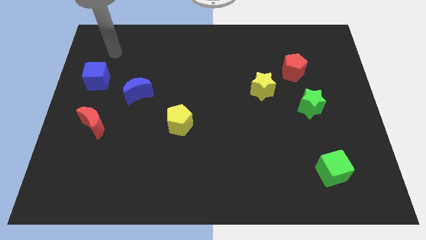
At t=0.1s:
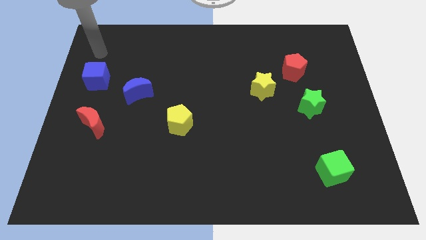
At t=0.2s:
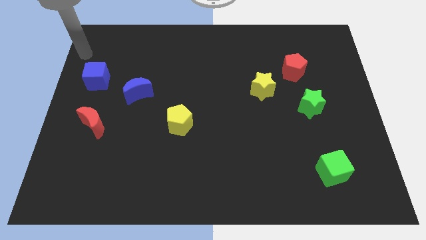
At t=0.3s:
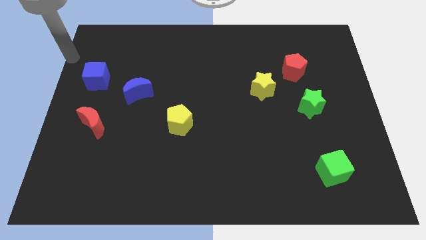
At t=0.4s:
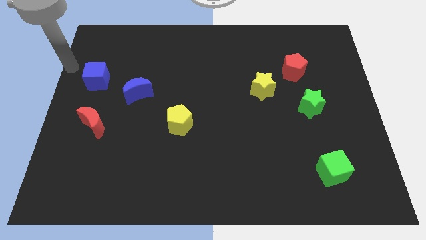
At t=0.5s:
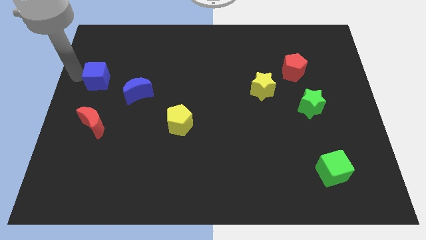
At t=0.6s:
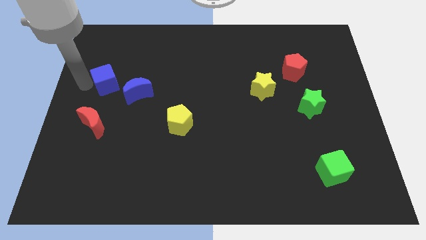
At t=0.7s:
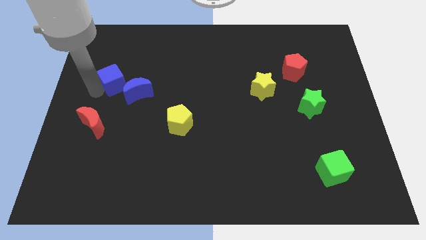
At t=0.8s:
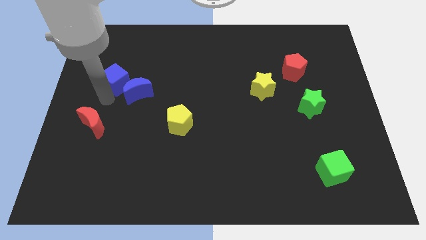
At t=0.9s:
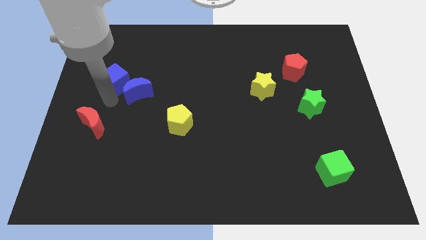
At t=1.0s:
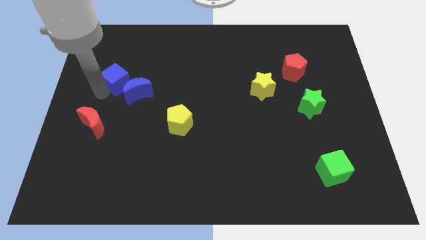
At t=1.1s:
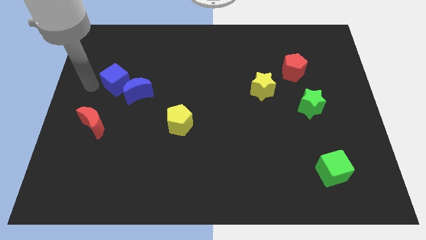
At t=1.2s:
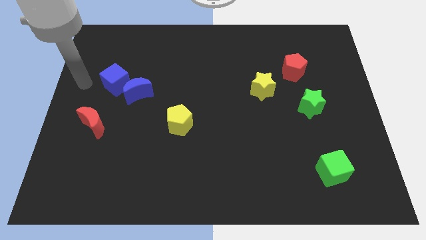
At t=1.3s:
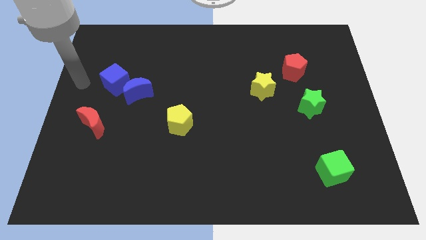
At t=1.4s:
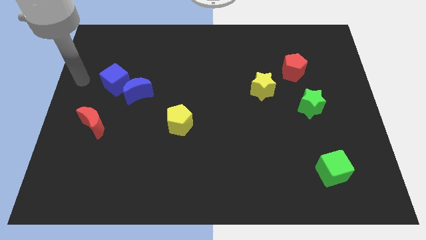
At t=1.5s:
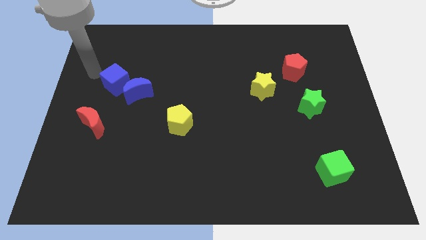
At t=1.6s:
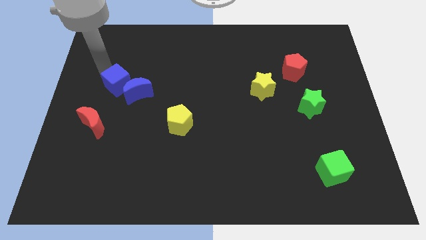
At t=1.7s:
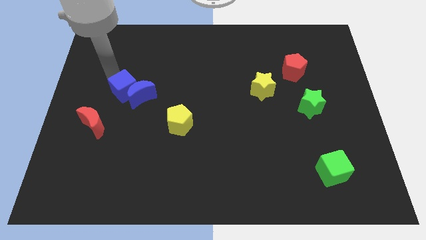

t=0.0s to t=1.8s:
push the blue cube into the blue crescent

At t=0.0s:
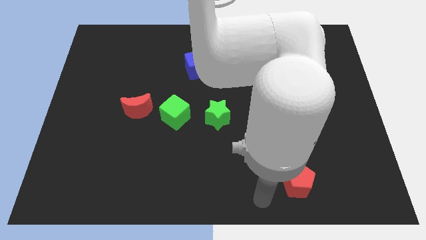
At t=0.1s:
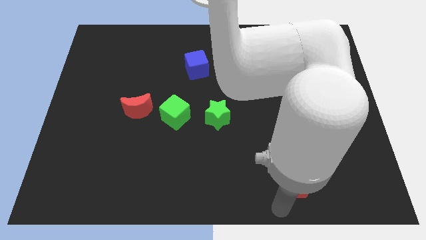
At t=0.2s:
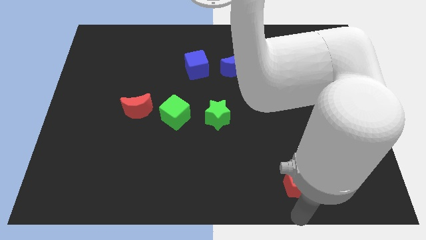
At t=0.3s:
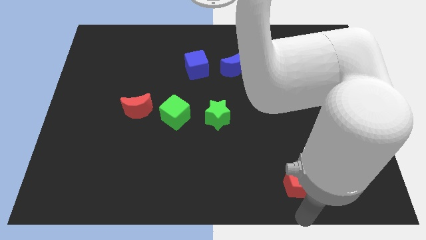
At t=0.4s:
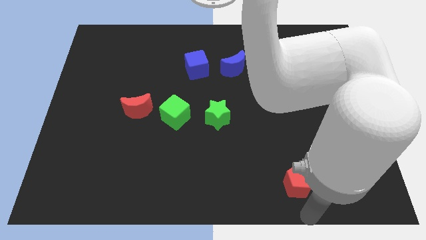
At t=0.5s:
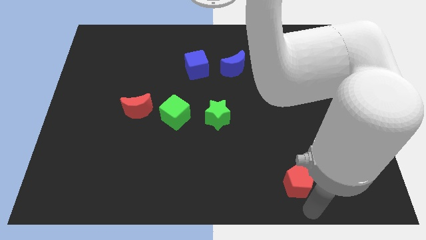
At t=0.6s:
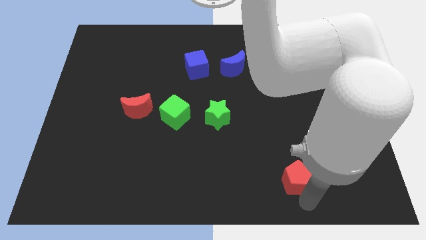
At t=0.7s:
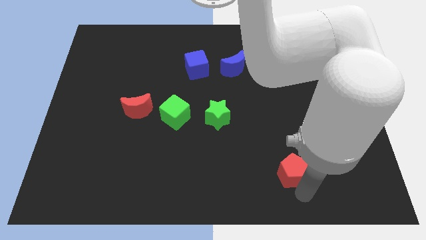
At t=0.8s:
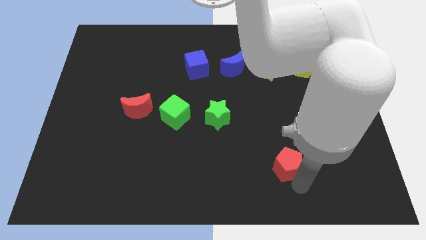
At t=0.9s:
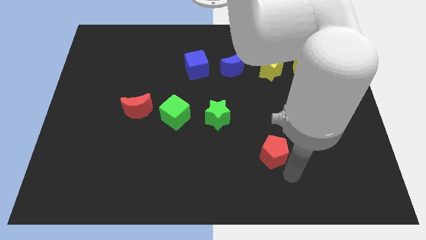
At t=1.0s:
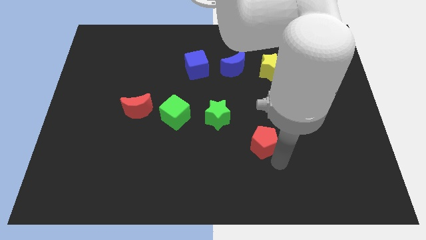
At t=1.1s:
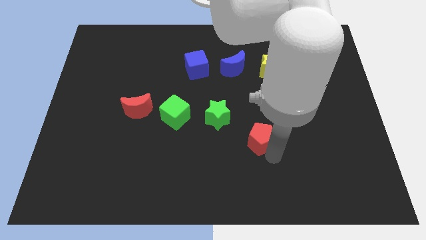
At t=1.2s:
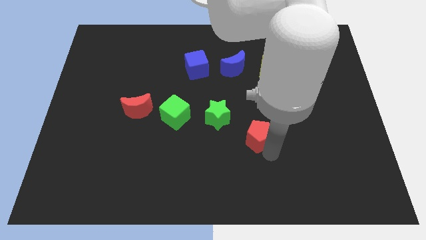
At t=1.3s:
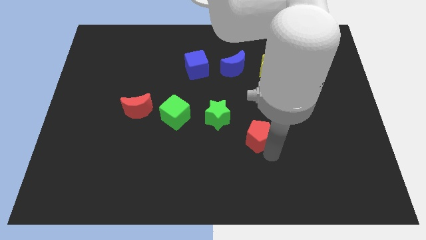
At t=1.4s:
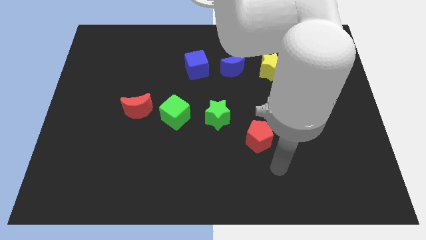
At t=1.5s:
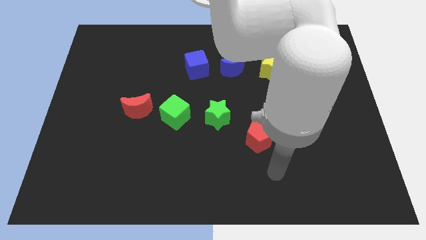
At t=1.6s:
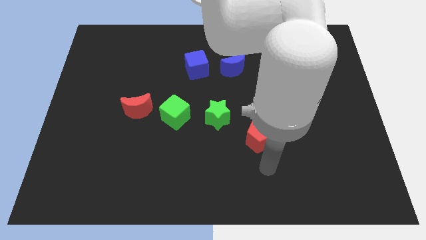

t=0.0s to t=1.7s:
move the red pentagon towards the green star

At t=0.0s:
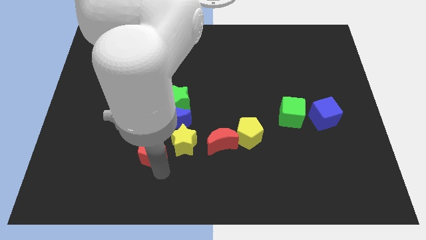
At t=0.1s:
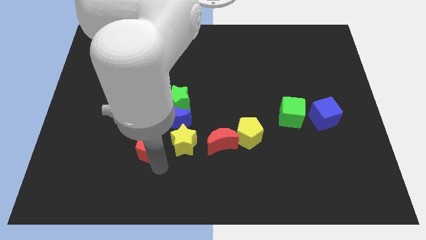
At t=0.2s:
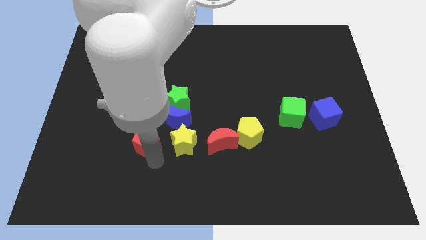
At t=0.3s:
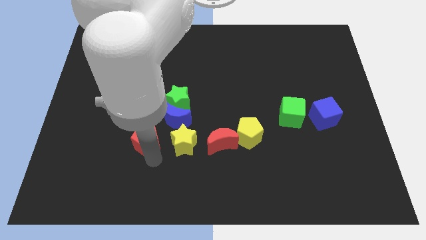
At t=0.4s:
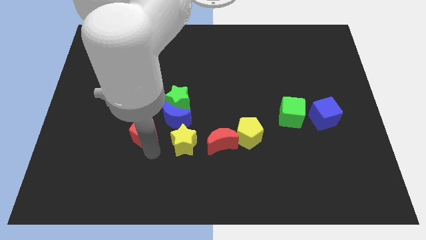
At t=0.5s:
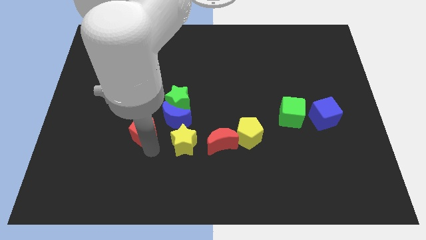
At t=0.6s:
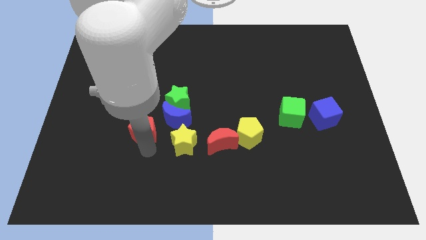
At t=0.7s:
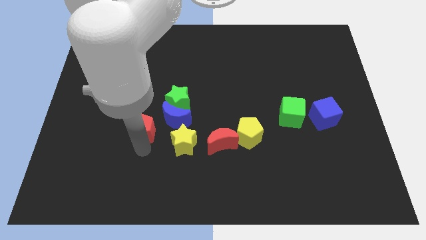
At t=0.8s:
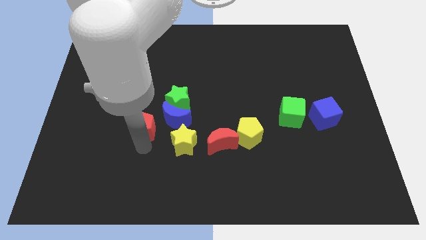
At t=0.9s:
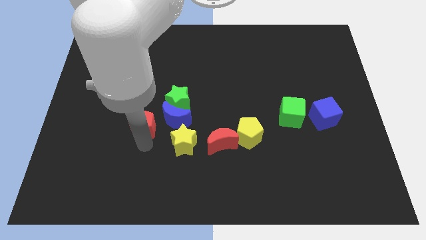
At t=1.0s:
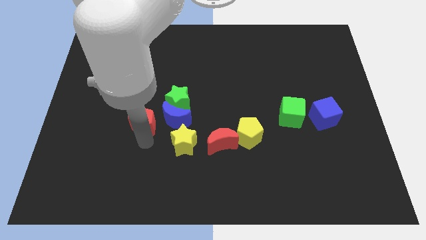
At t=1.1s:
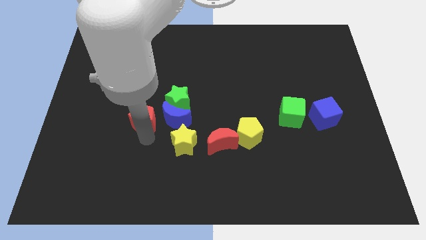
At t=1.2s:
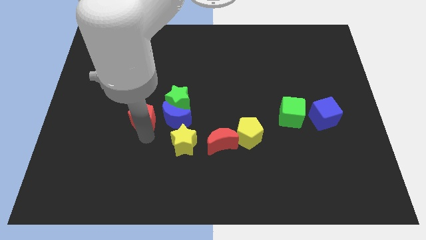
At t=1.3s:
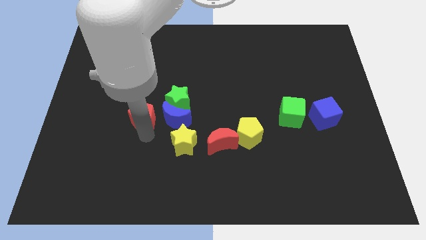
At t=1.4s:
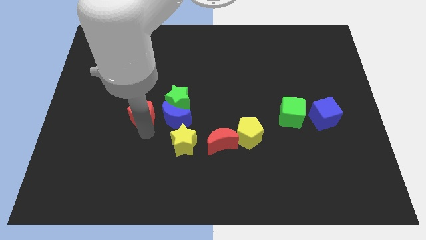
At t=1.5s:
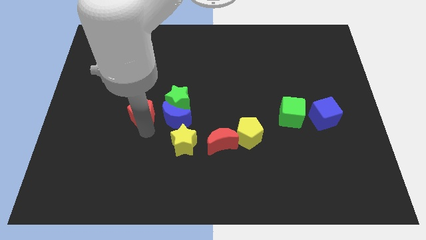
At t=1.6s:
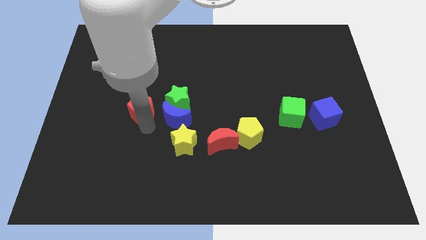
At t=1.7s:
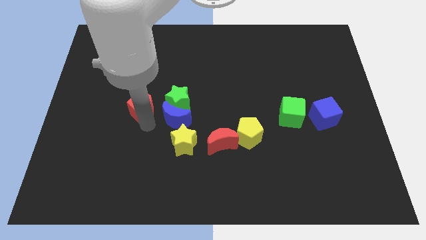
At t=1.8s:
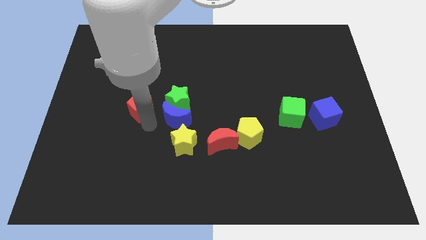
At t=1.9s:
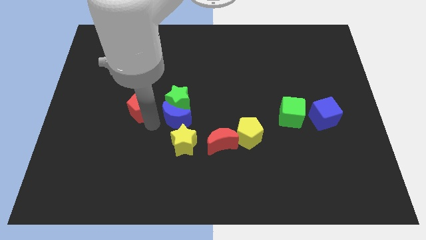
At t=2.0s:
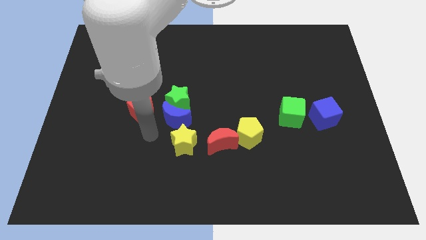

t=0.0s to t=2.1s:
place red pentagon to the left of green star

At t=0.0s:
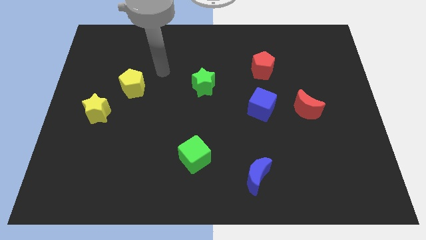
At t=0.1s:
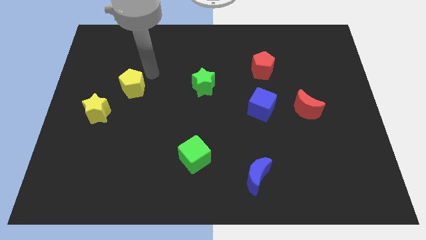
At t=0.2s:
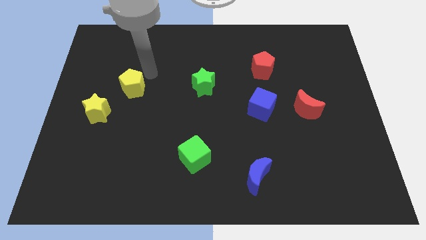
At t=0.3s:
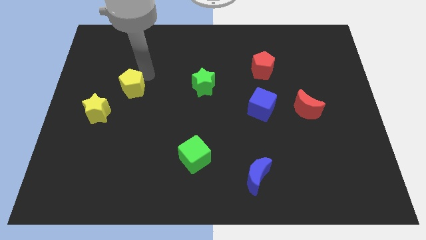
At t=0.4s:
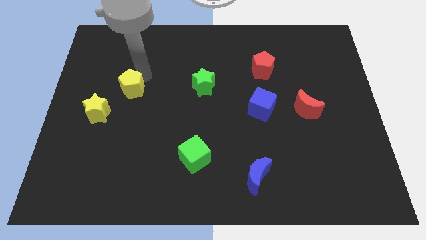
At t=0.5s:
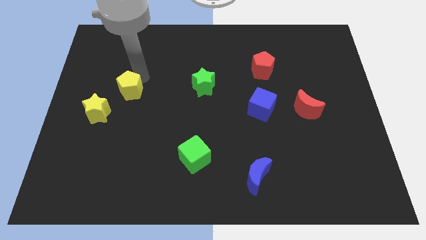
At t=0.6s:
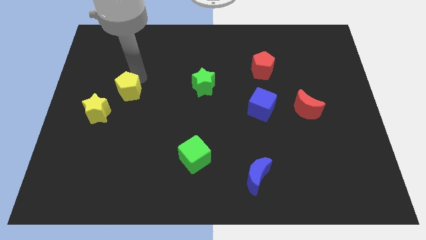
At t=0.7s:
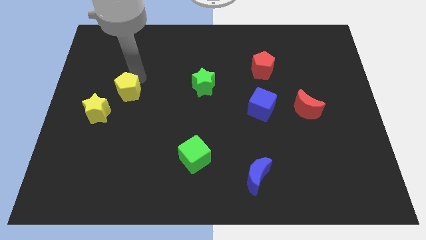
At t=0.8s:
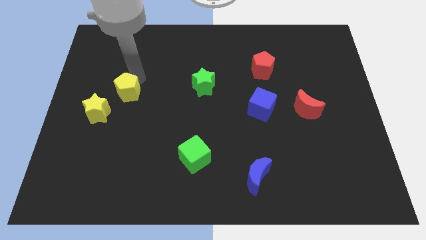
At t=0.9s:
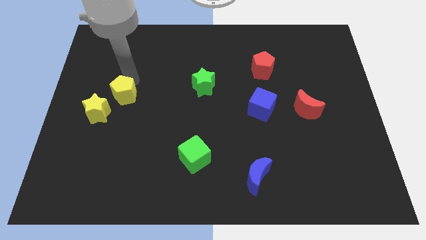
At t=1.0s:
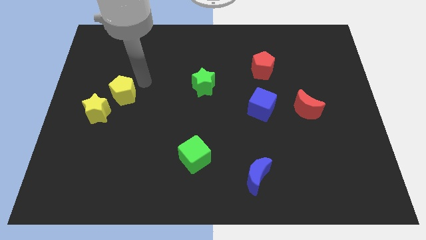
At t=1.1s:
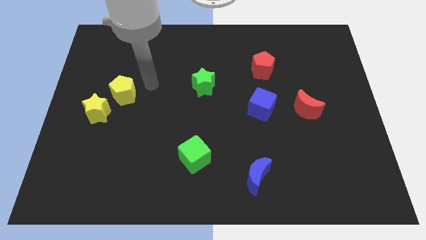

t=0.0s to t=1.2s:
move the yellow pentagon diagonally top right to the yellow star

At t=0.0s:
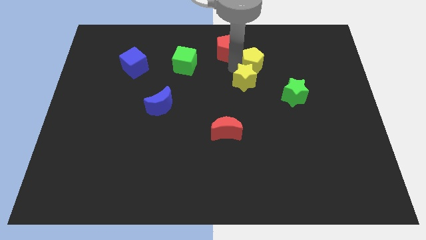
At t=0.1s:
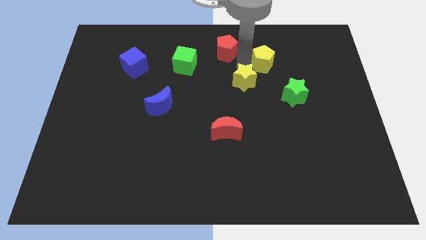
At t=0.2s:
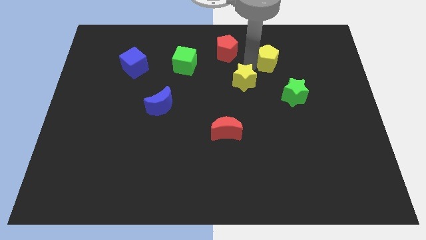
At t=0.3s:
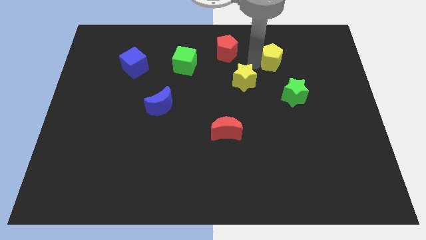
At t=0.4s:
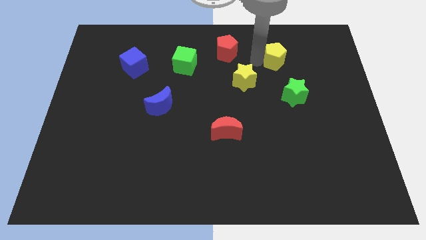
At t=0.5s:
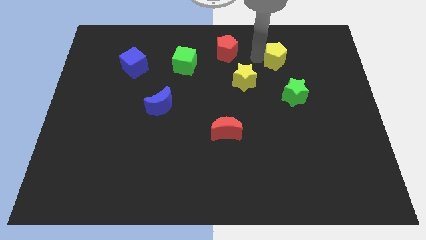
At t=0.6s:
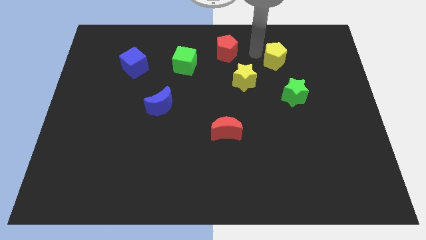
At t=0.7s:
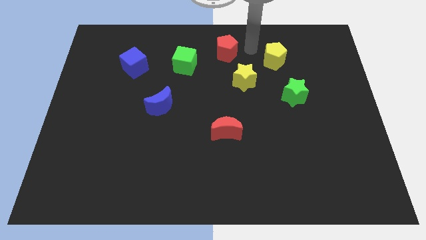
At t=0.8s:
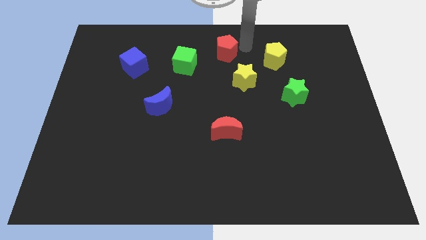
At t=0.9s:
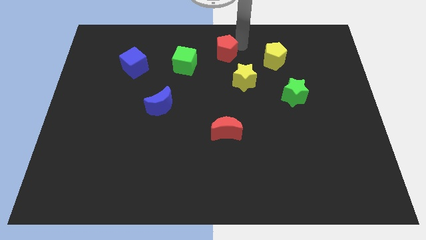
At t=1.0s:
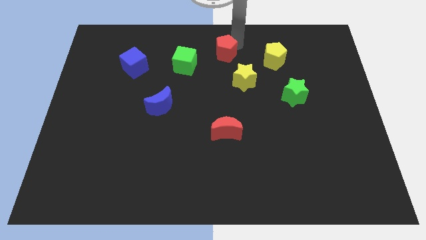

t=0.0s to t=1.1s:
separate the yellow pentagon away from the yellow star

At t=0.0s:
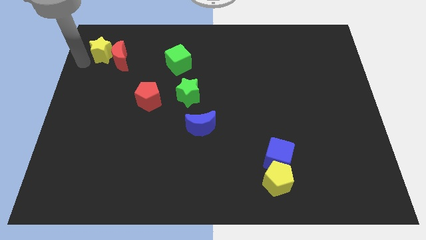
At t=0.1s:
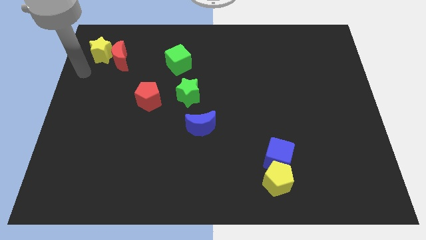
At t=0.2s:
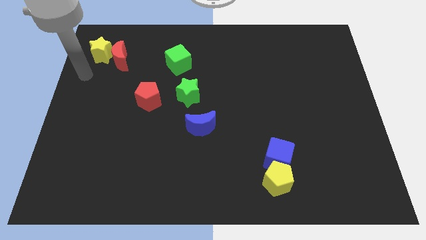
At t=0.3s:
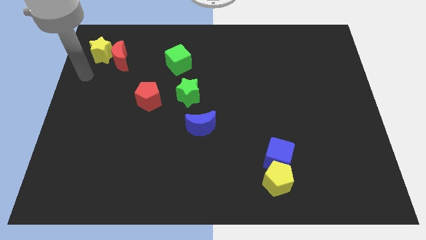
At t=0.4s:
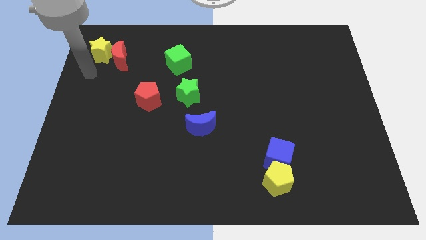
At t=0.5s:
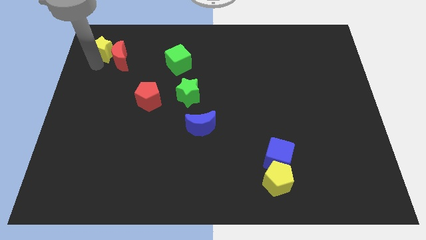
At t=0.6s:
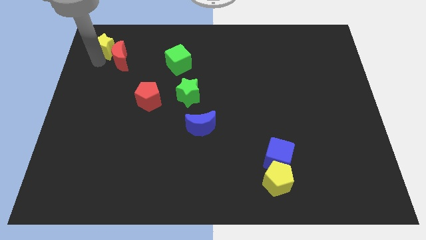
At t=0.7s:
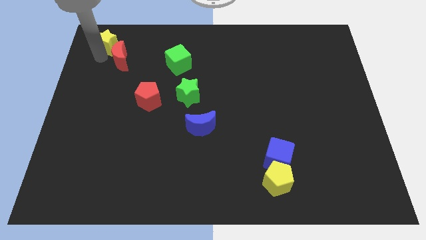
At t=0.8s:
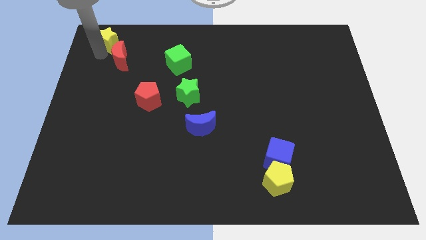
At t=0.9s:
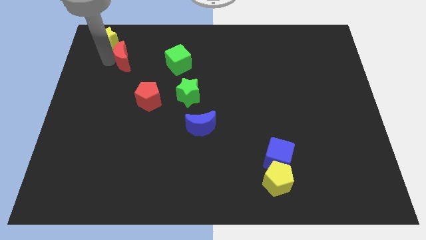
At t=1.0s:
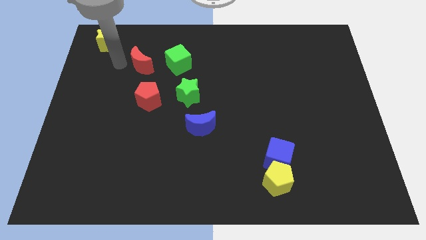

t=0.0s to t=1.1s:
separate yellow star and red moon from each other
